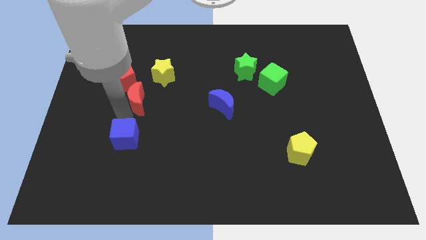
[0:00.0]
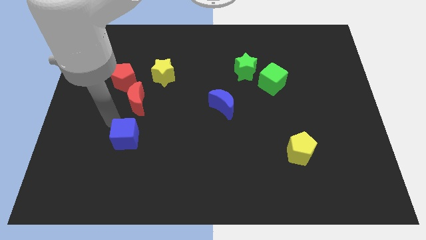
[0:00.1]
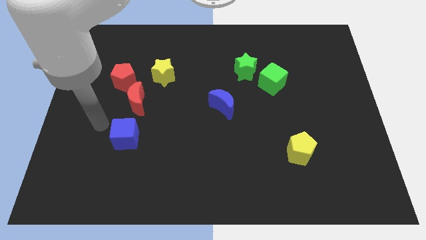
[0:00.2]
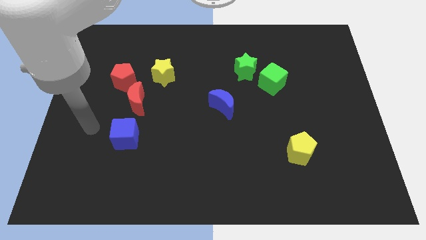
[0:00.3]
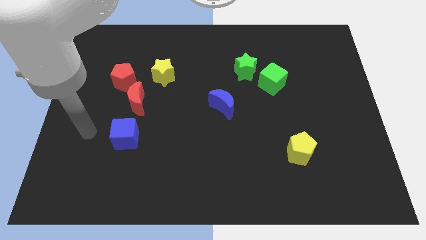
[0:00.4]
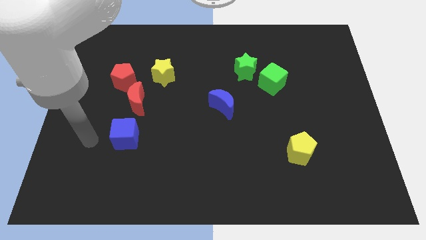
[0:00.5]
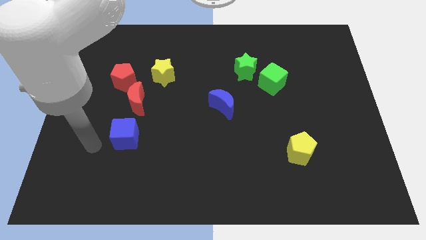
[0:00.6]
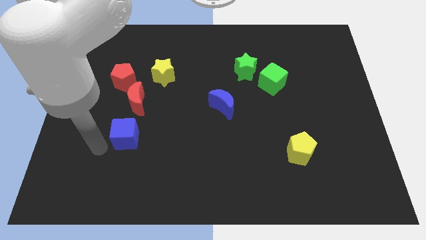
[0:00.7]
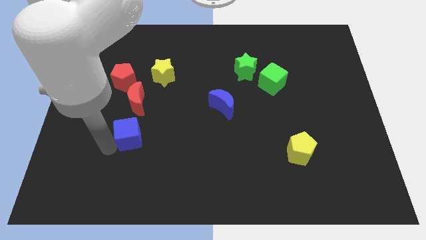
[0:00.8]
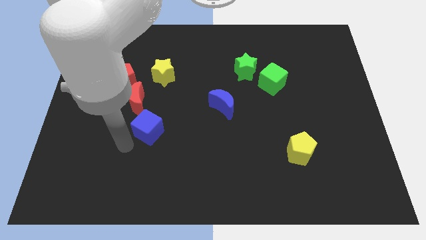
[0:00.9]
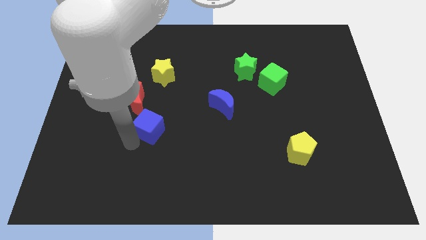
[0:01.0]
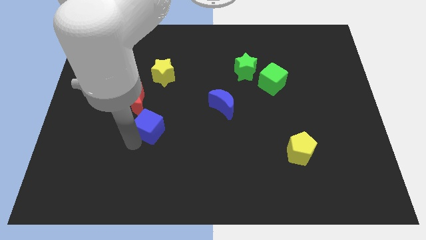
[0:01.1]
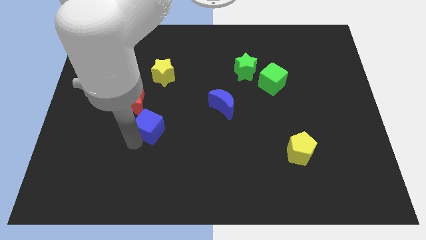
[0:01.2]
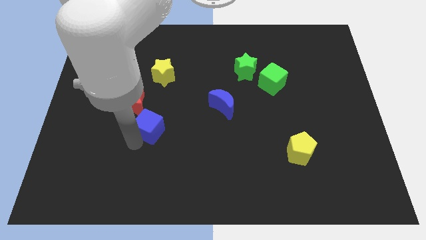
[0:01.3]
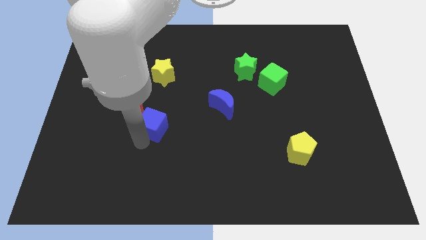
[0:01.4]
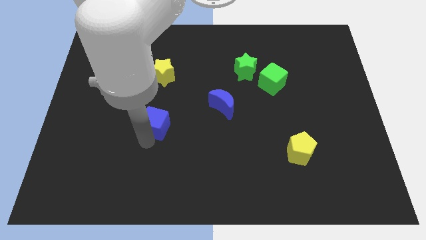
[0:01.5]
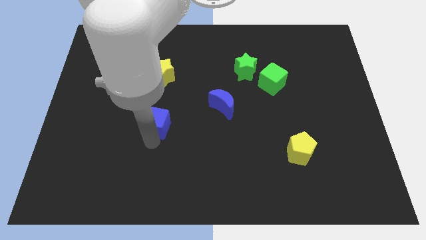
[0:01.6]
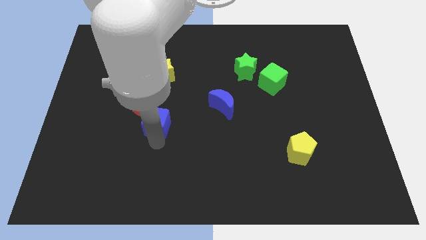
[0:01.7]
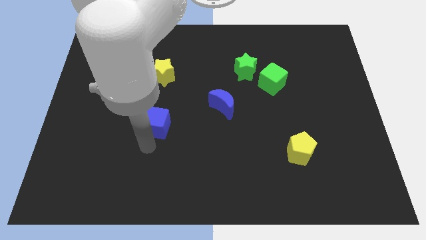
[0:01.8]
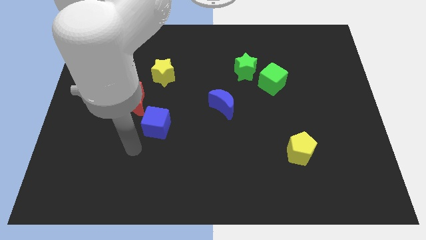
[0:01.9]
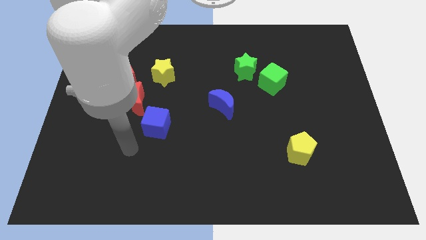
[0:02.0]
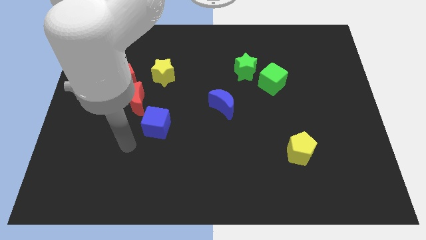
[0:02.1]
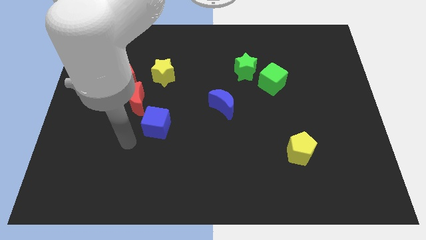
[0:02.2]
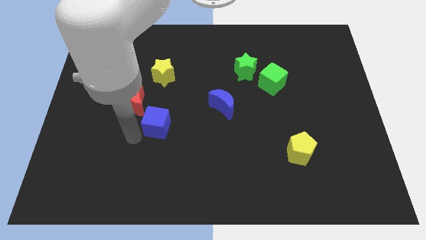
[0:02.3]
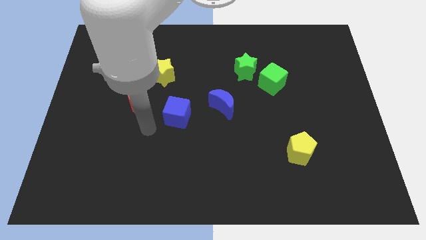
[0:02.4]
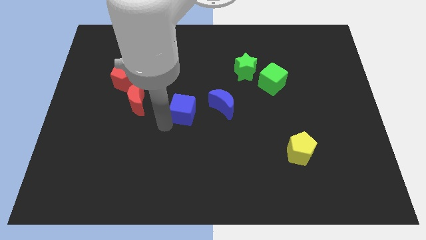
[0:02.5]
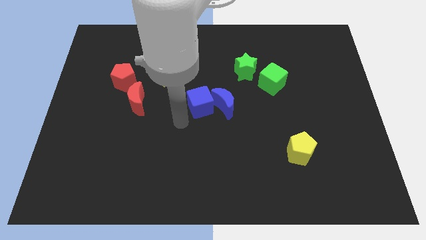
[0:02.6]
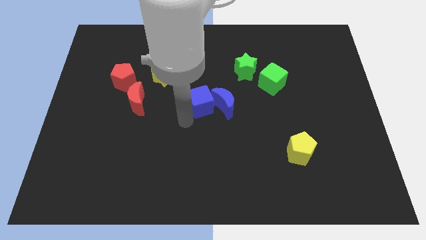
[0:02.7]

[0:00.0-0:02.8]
push the blue cube into the left side of the blue crescent

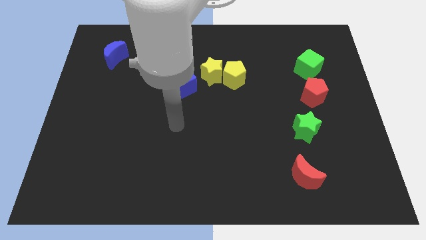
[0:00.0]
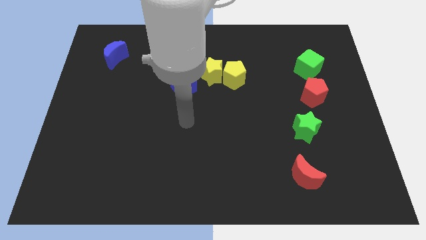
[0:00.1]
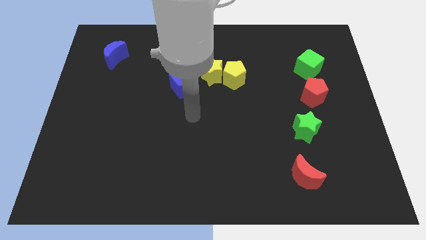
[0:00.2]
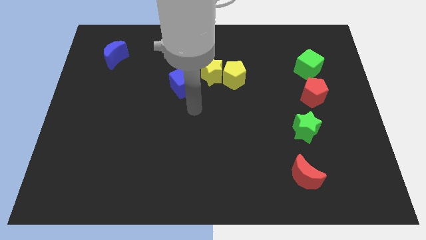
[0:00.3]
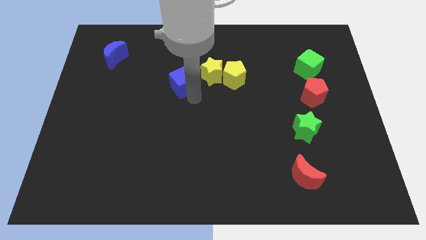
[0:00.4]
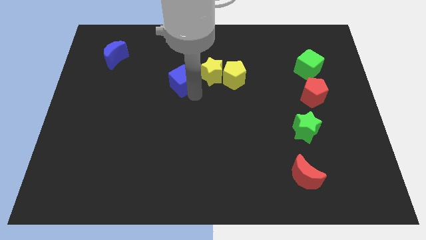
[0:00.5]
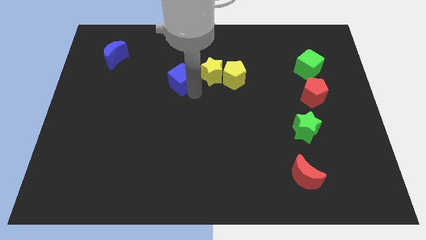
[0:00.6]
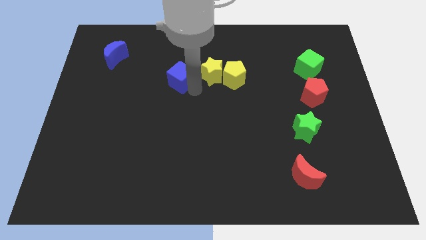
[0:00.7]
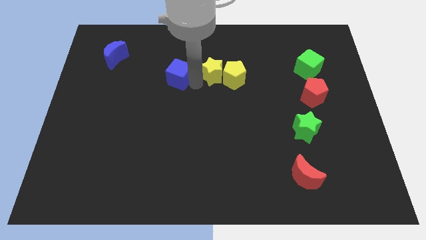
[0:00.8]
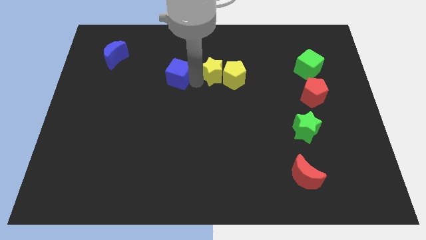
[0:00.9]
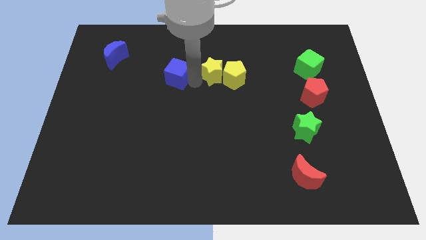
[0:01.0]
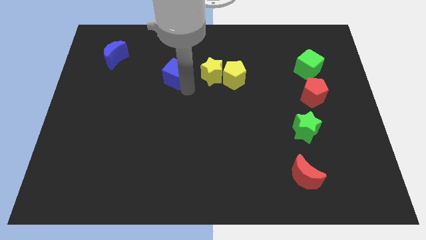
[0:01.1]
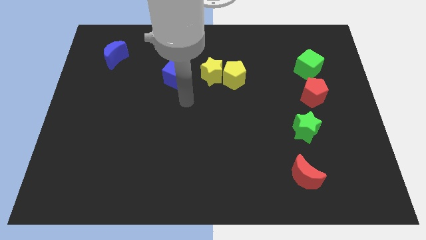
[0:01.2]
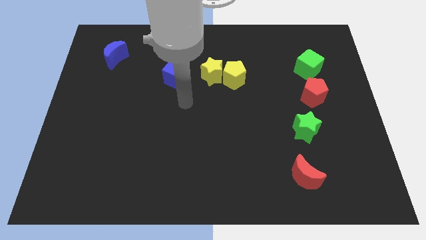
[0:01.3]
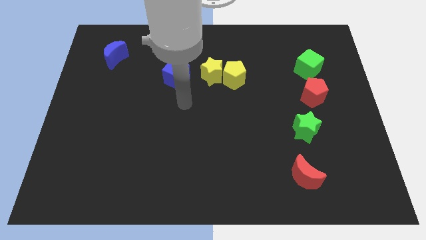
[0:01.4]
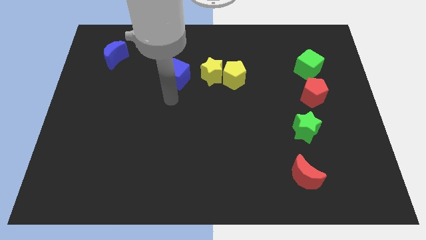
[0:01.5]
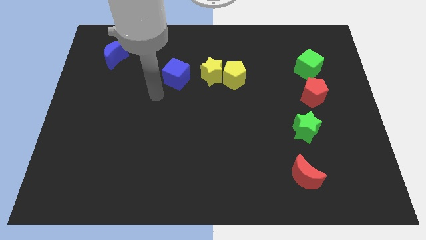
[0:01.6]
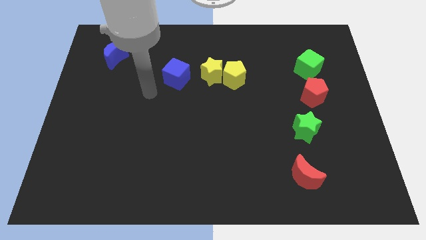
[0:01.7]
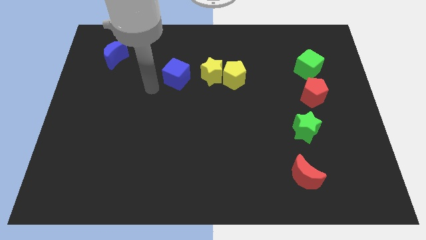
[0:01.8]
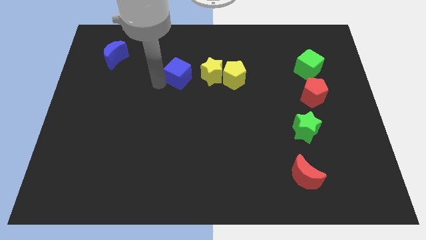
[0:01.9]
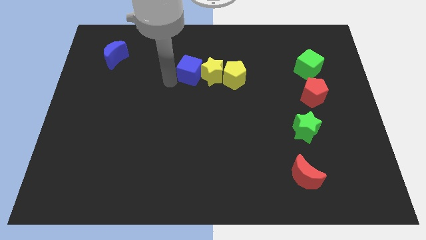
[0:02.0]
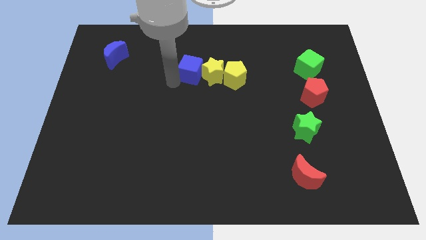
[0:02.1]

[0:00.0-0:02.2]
place the blue cube to the left side of yellow star

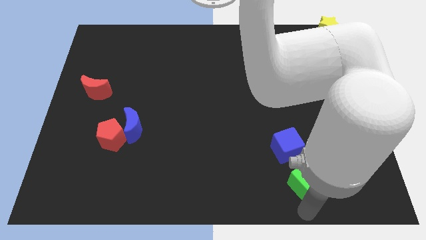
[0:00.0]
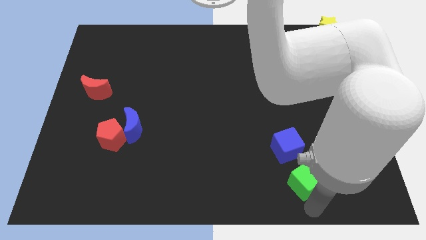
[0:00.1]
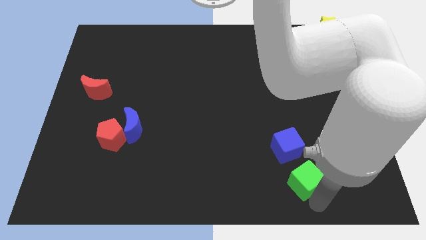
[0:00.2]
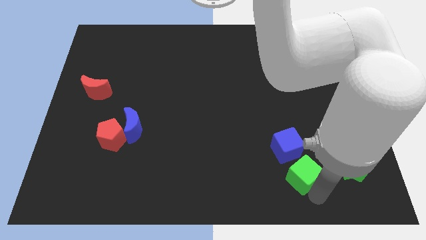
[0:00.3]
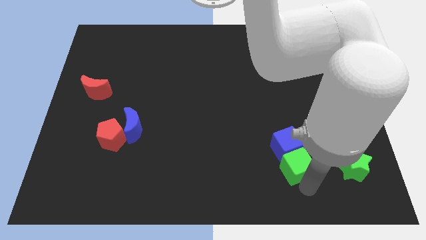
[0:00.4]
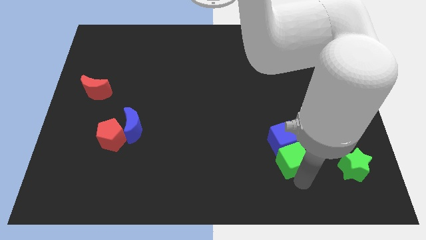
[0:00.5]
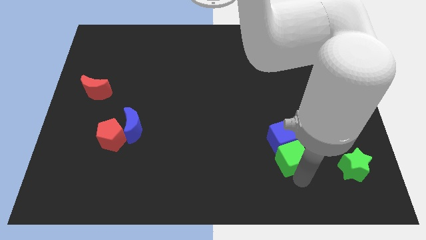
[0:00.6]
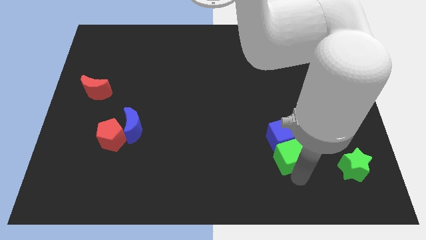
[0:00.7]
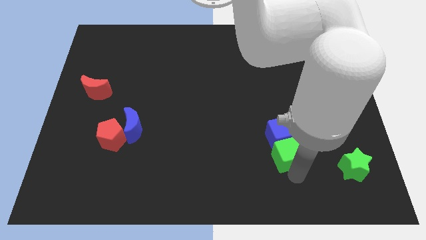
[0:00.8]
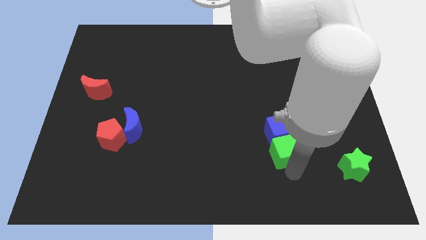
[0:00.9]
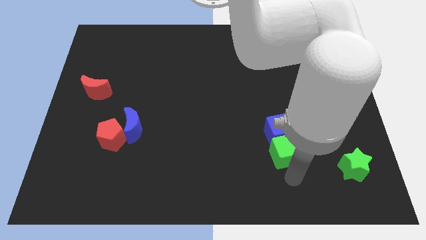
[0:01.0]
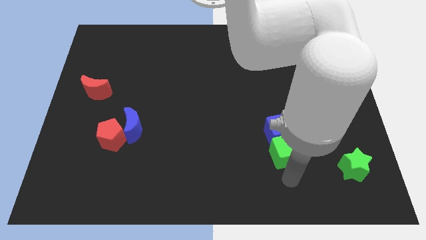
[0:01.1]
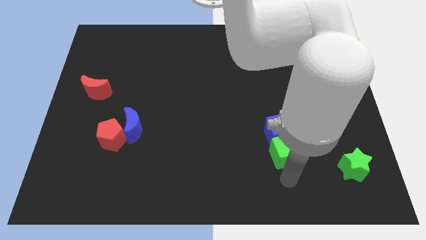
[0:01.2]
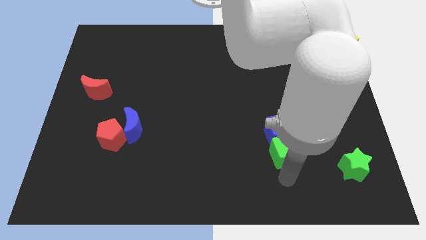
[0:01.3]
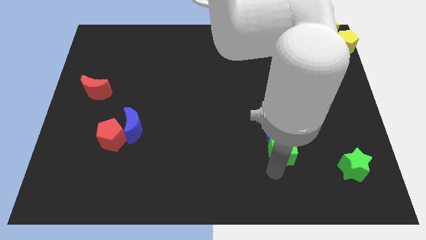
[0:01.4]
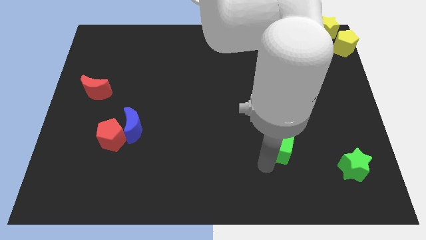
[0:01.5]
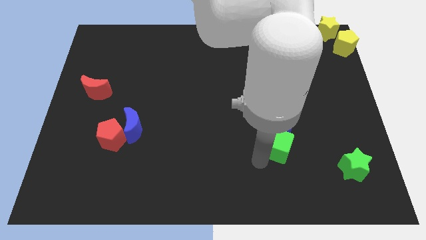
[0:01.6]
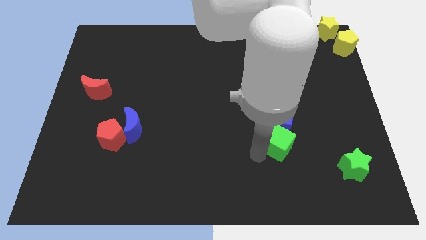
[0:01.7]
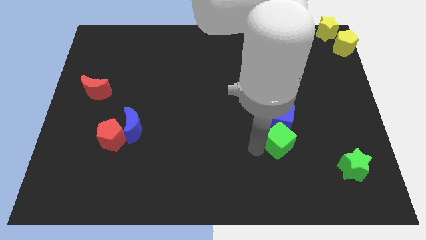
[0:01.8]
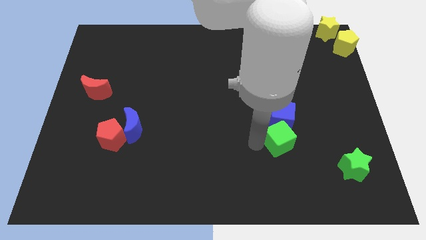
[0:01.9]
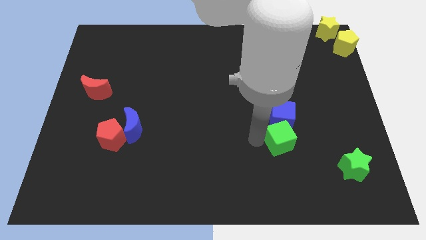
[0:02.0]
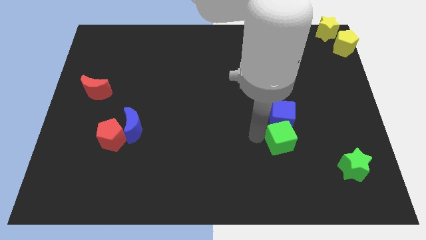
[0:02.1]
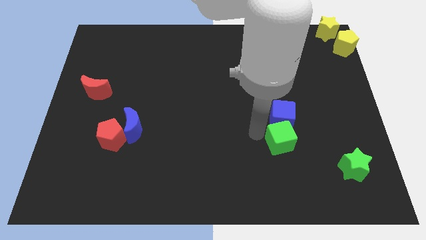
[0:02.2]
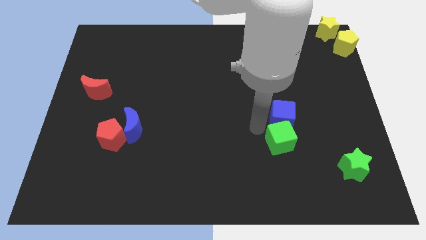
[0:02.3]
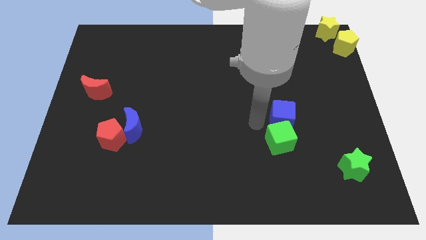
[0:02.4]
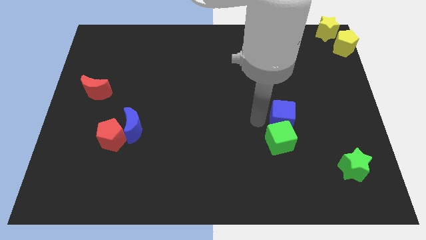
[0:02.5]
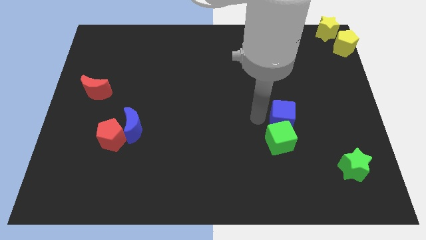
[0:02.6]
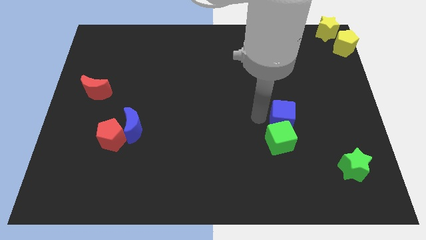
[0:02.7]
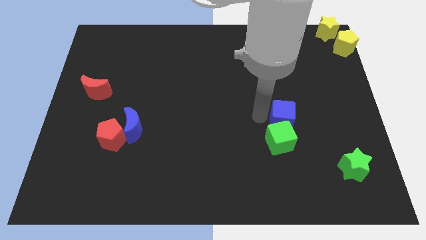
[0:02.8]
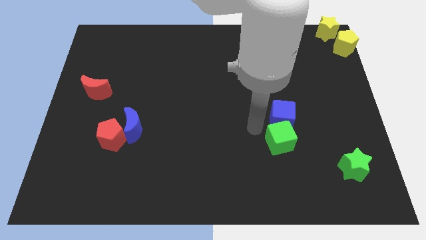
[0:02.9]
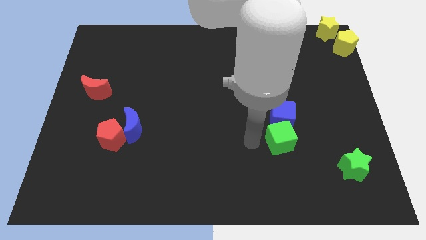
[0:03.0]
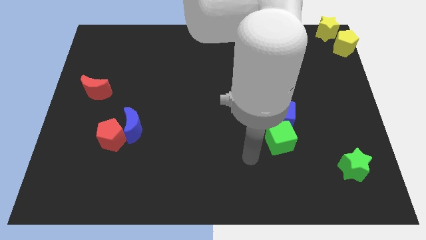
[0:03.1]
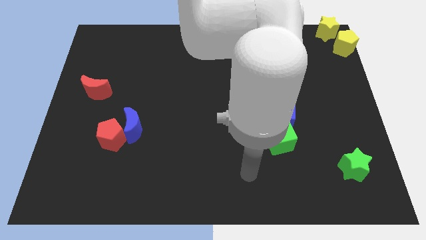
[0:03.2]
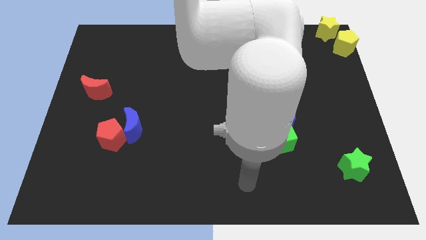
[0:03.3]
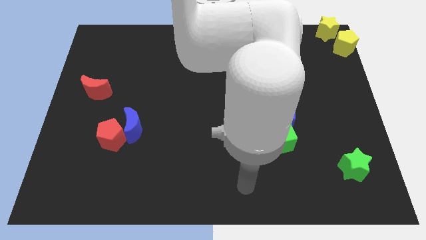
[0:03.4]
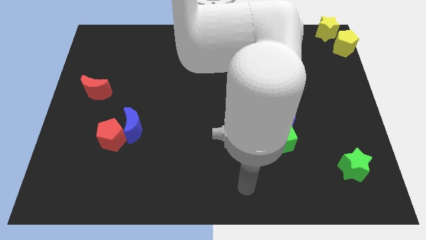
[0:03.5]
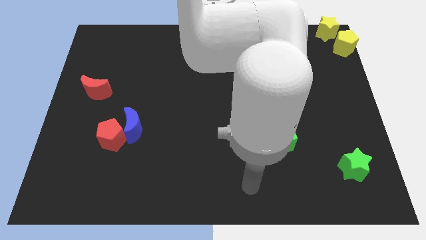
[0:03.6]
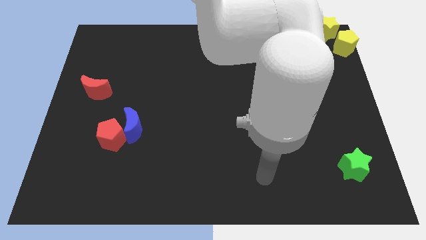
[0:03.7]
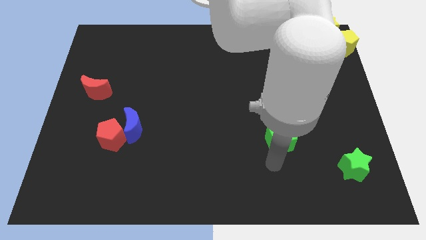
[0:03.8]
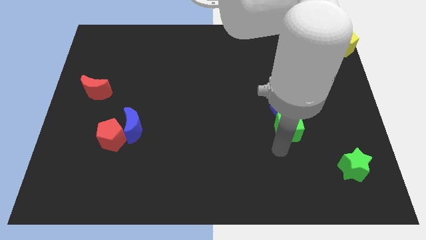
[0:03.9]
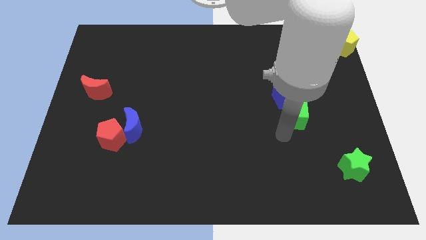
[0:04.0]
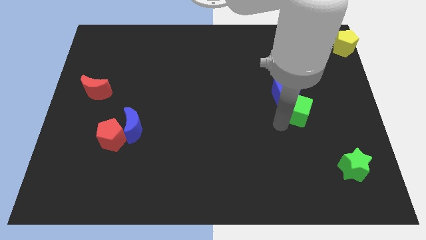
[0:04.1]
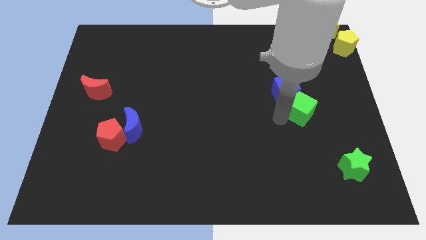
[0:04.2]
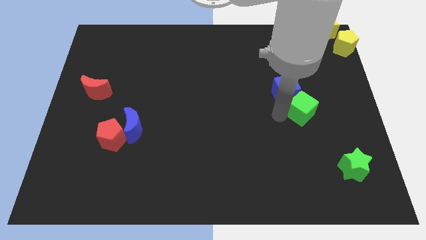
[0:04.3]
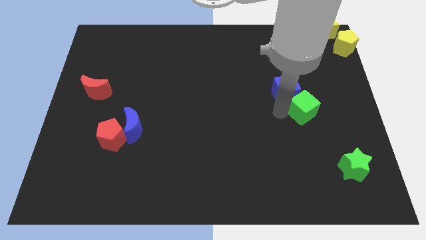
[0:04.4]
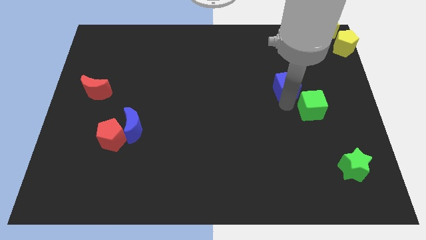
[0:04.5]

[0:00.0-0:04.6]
push the green cube into the blue cube
